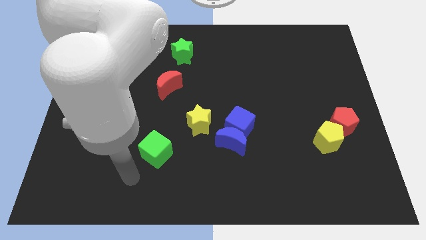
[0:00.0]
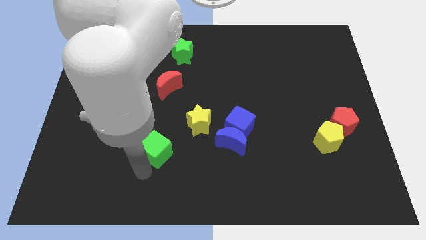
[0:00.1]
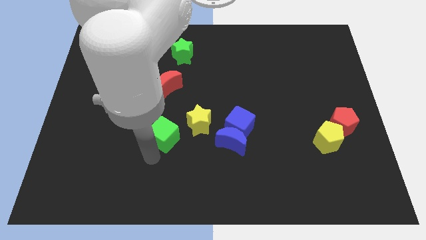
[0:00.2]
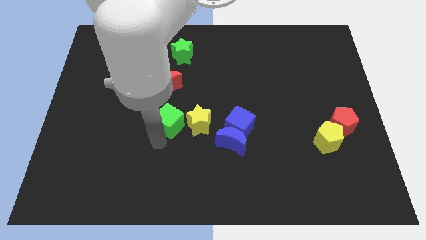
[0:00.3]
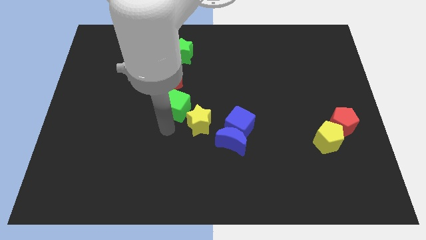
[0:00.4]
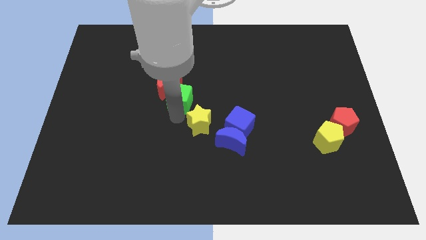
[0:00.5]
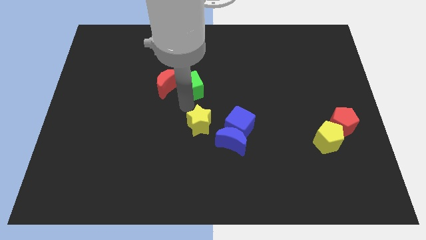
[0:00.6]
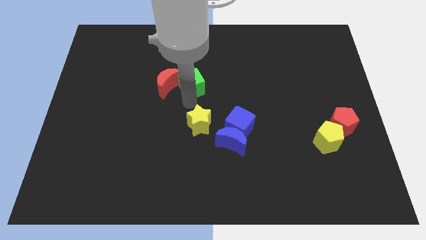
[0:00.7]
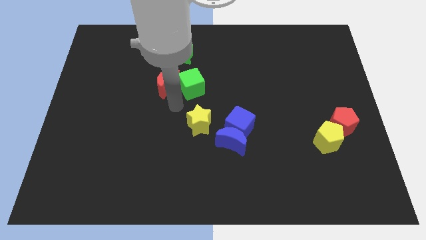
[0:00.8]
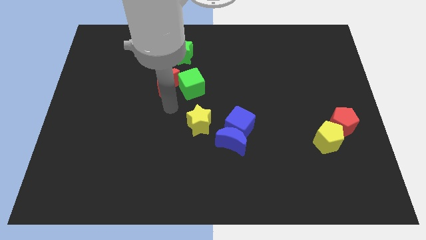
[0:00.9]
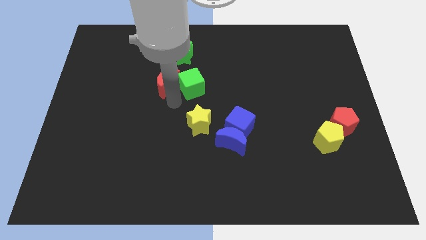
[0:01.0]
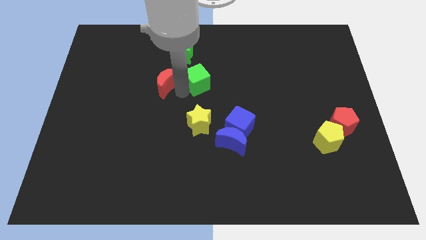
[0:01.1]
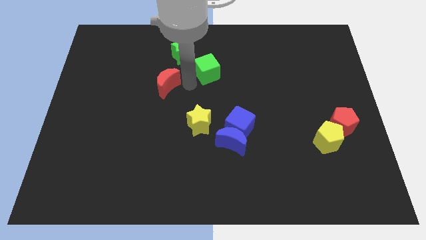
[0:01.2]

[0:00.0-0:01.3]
move the green cube to the right of the red crescent

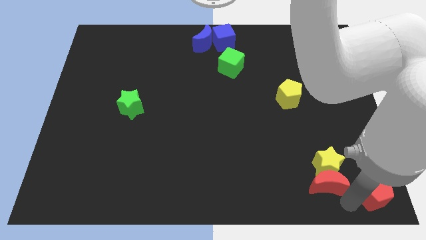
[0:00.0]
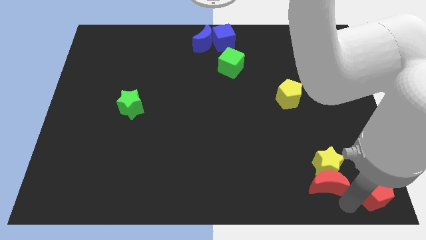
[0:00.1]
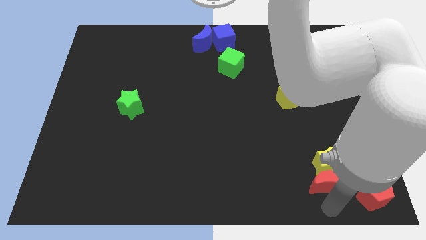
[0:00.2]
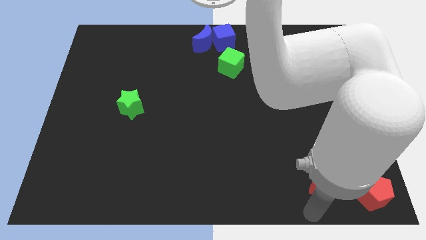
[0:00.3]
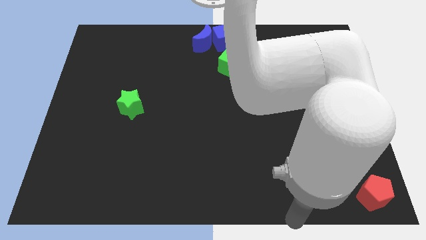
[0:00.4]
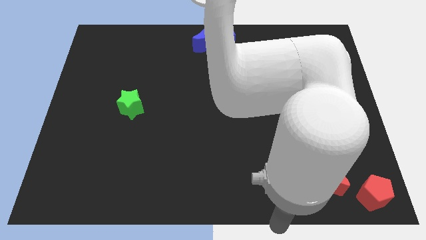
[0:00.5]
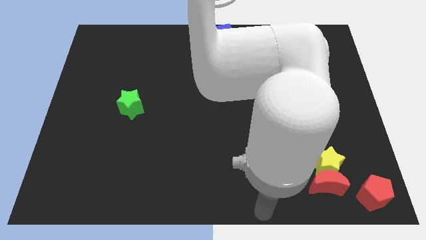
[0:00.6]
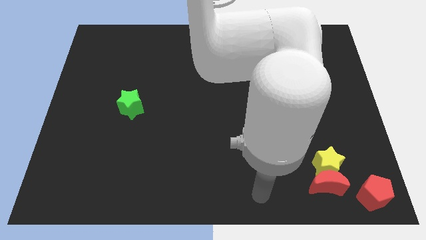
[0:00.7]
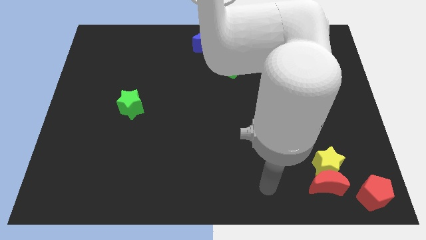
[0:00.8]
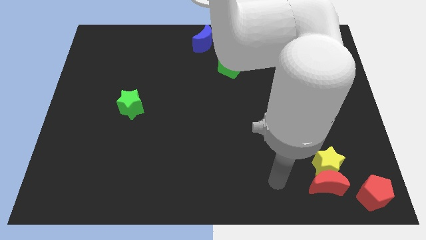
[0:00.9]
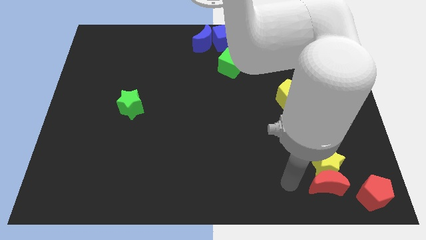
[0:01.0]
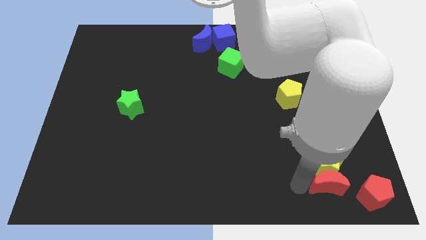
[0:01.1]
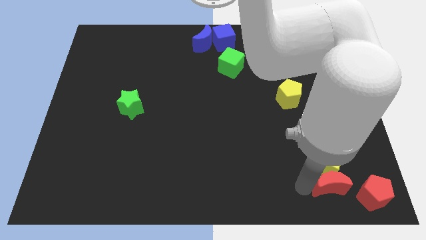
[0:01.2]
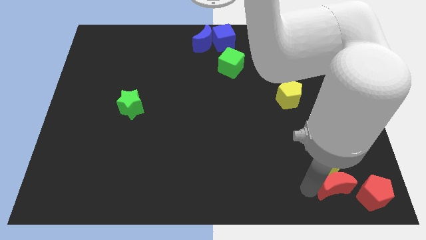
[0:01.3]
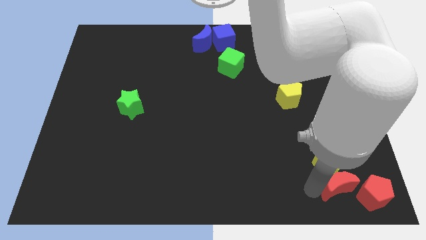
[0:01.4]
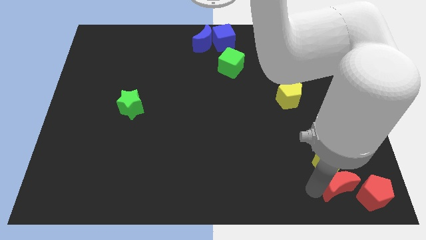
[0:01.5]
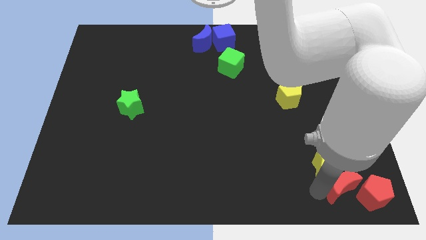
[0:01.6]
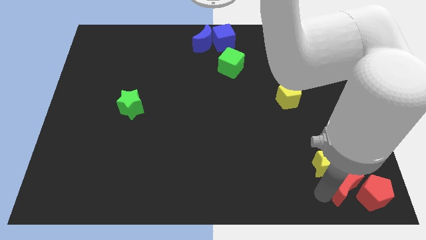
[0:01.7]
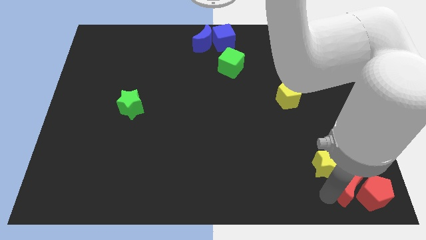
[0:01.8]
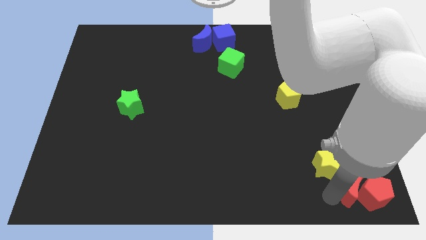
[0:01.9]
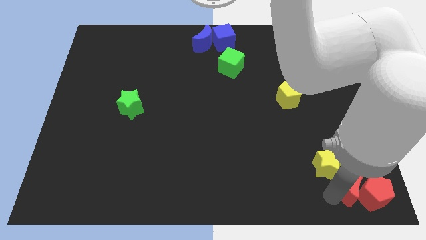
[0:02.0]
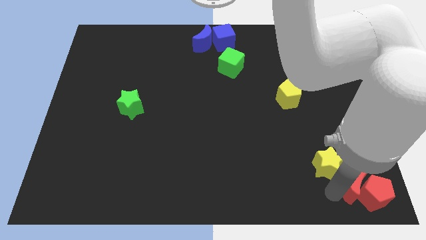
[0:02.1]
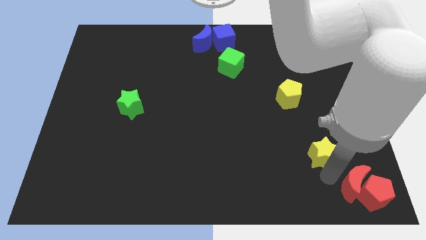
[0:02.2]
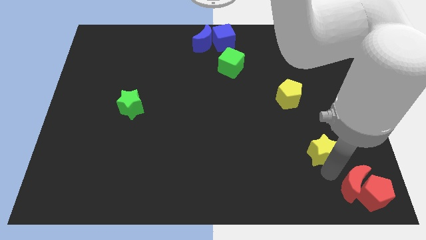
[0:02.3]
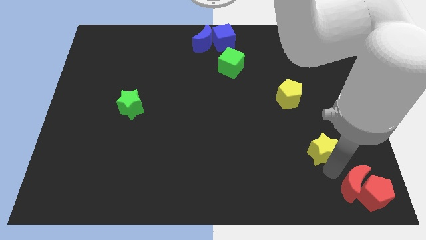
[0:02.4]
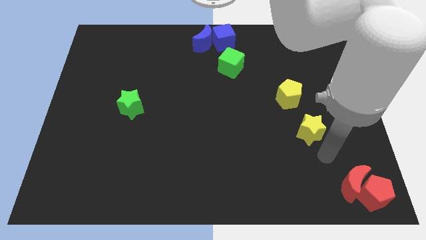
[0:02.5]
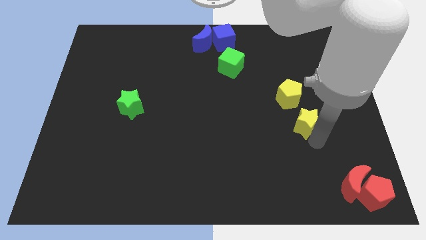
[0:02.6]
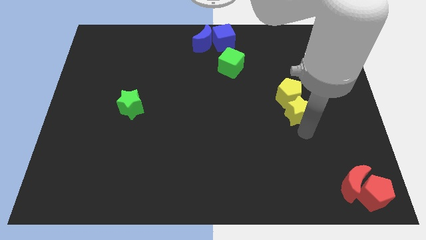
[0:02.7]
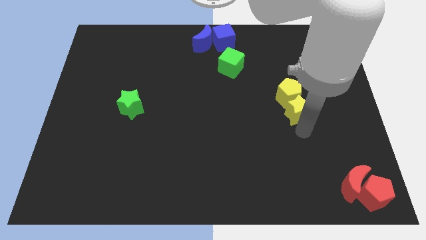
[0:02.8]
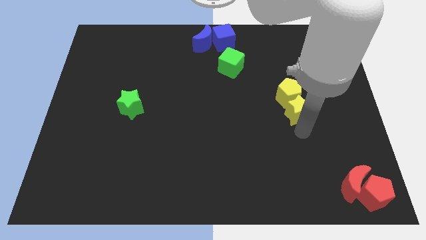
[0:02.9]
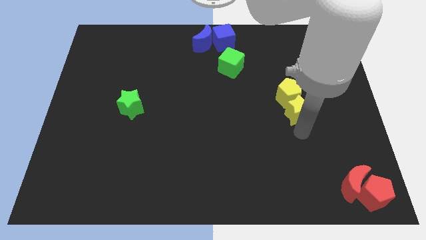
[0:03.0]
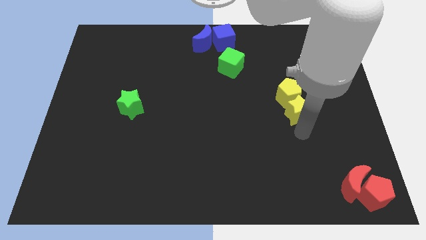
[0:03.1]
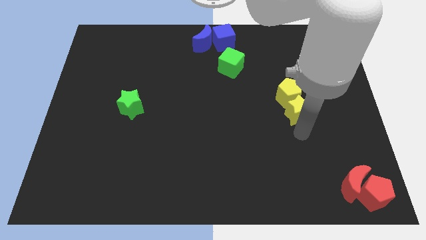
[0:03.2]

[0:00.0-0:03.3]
arrange the red blocks and yellow blocks diagonal to each other

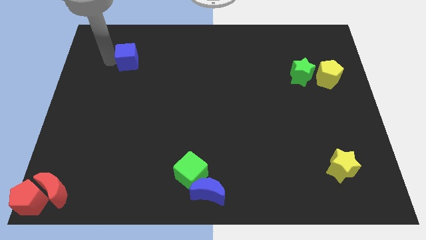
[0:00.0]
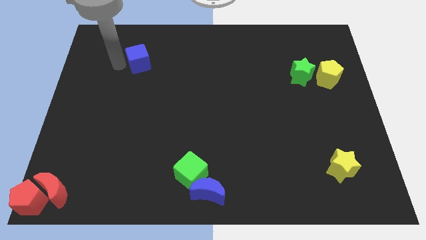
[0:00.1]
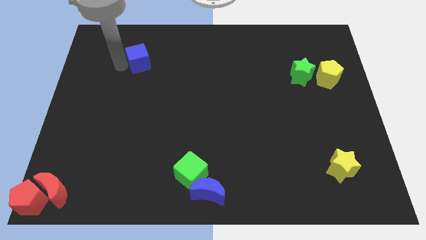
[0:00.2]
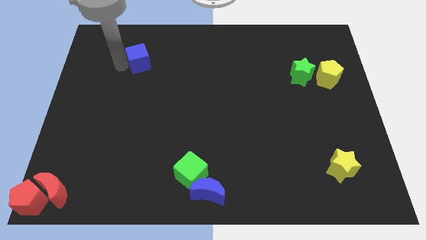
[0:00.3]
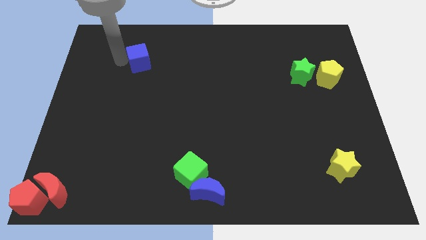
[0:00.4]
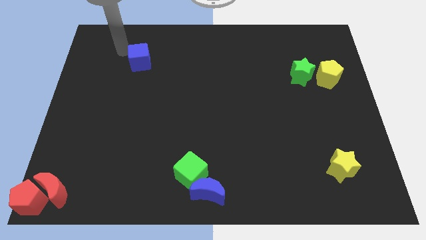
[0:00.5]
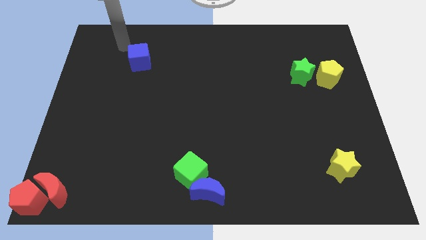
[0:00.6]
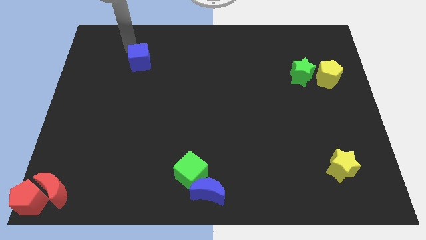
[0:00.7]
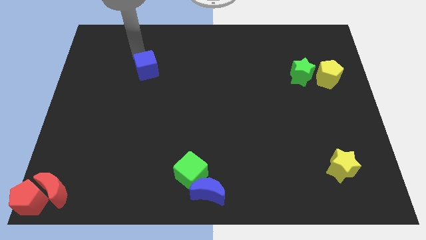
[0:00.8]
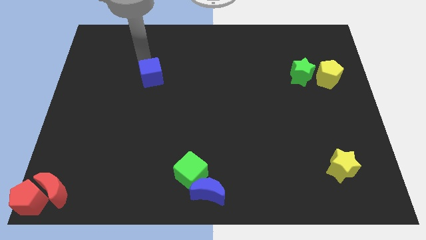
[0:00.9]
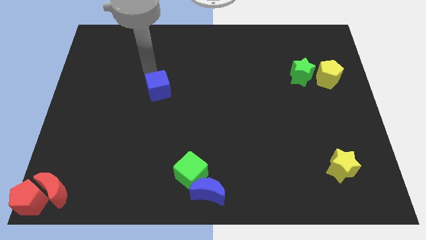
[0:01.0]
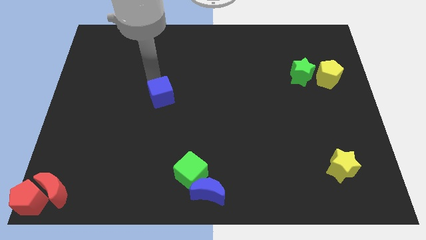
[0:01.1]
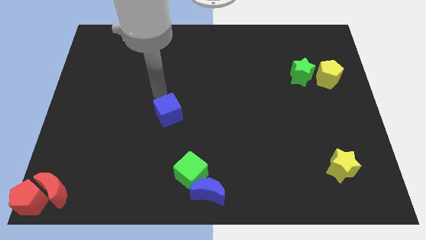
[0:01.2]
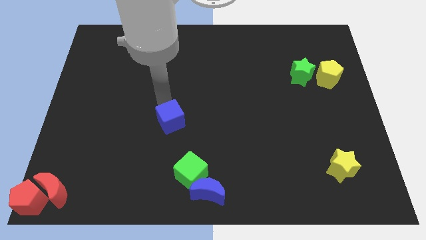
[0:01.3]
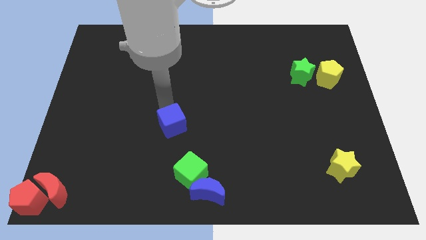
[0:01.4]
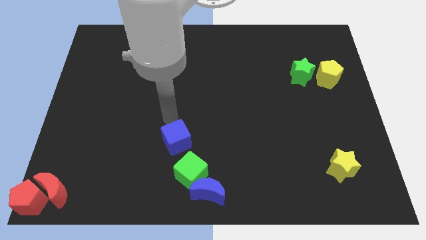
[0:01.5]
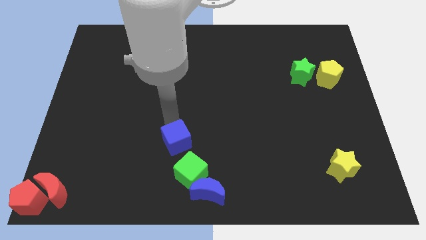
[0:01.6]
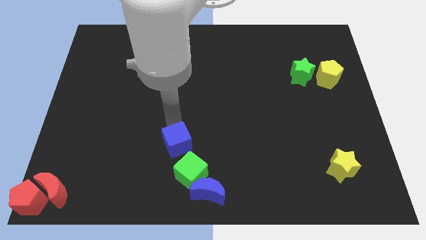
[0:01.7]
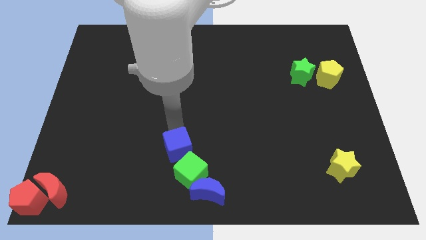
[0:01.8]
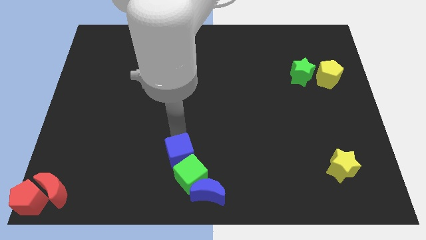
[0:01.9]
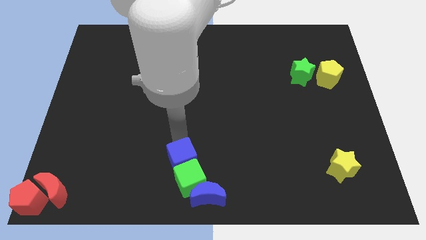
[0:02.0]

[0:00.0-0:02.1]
move the blue cube into the top side of the green cube

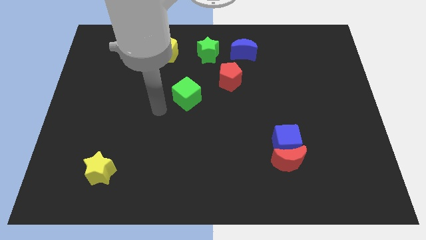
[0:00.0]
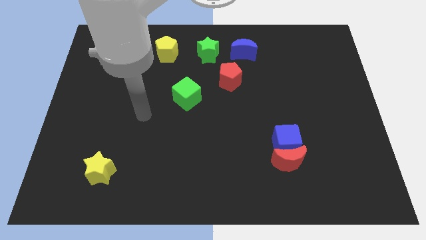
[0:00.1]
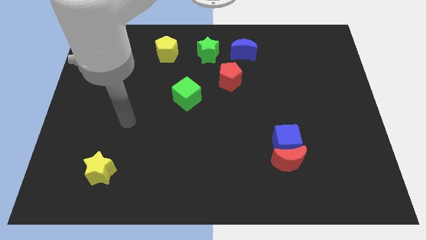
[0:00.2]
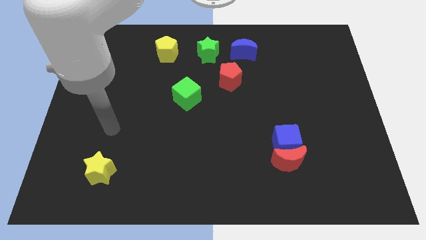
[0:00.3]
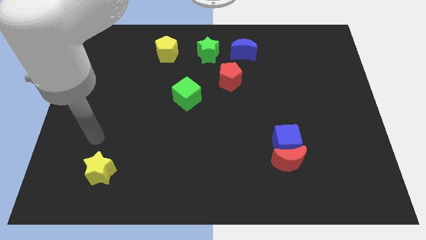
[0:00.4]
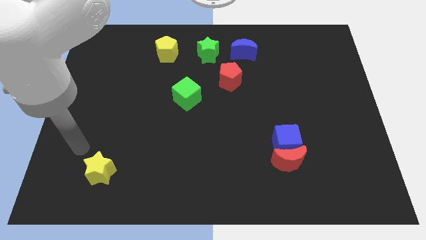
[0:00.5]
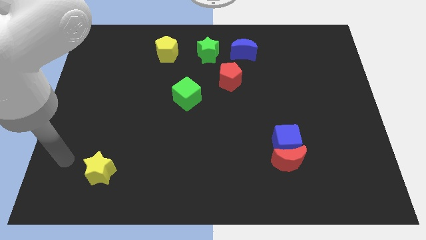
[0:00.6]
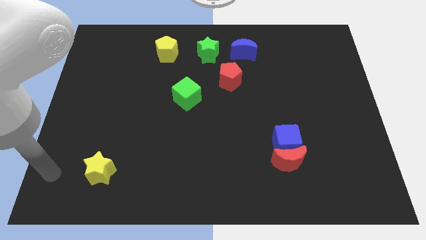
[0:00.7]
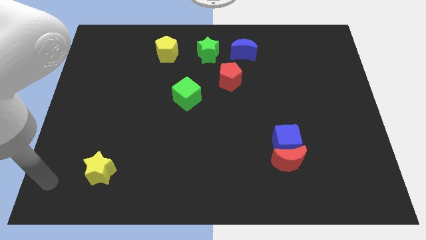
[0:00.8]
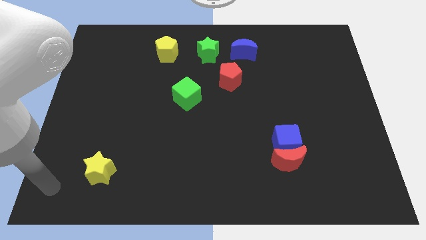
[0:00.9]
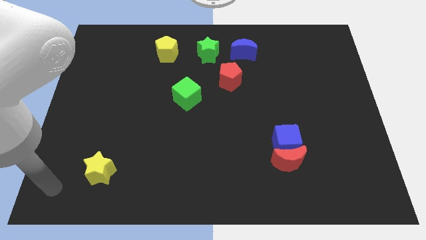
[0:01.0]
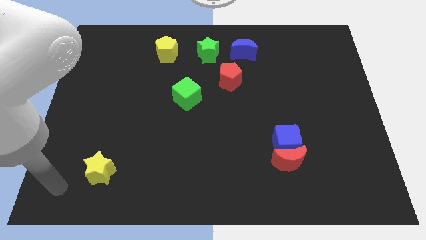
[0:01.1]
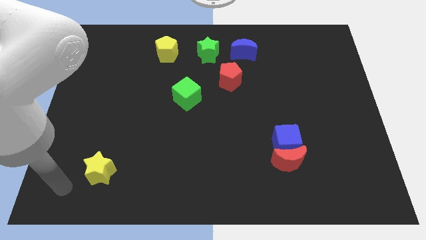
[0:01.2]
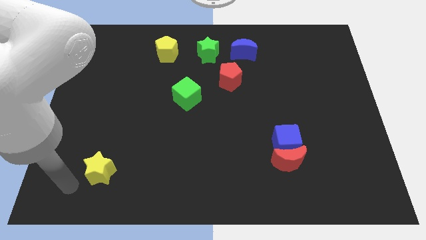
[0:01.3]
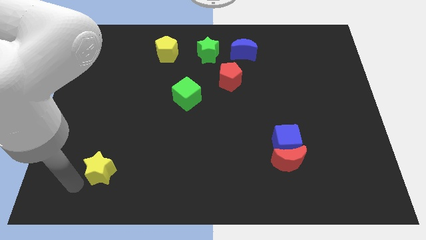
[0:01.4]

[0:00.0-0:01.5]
point your arm at the left of the yellow star

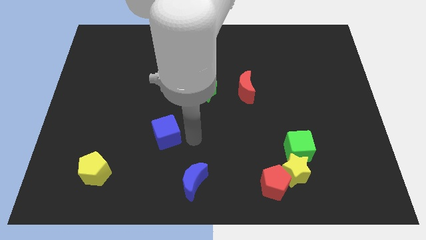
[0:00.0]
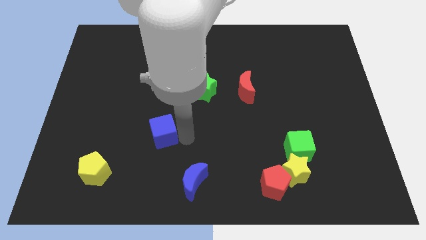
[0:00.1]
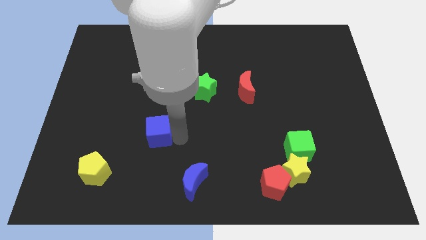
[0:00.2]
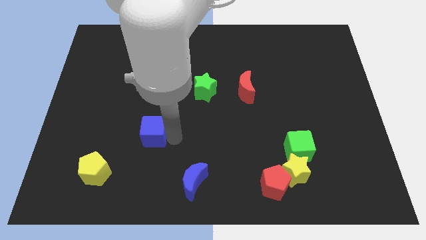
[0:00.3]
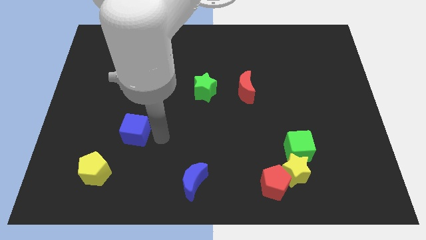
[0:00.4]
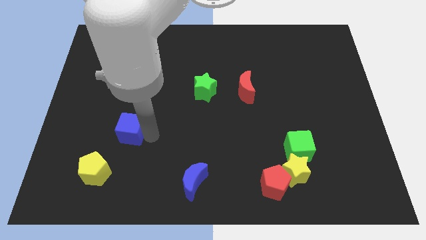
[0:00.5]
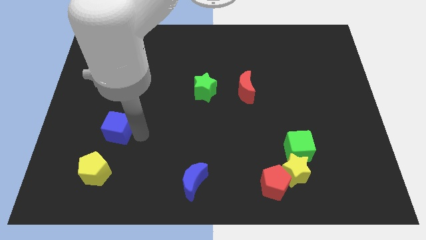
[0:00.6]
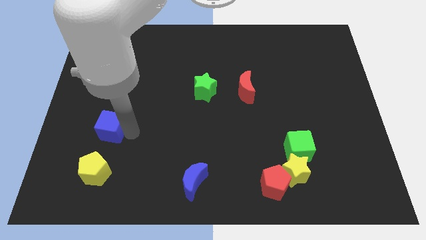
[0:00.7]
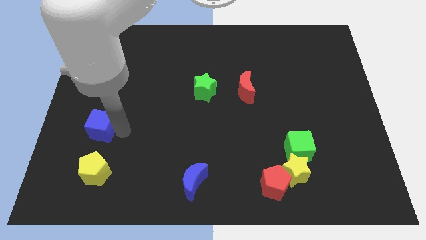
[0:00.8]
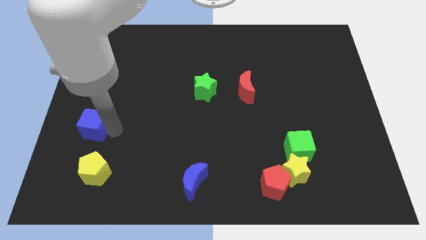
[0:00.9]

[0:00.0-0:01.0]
place blue cube vertically above yellow pentagon
